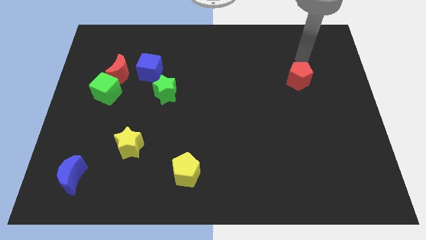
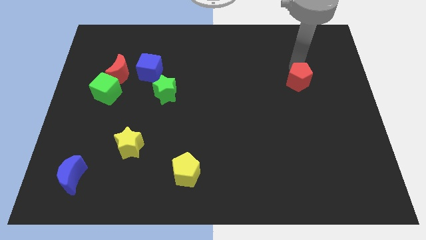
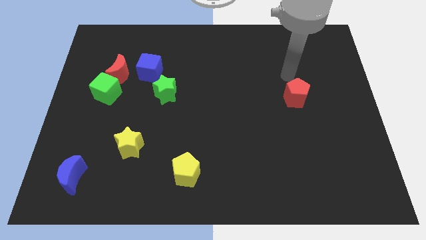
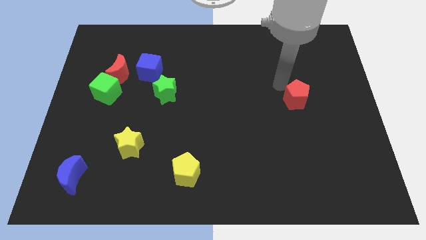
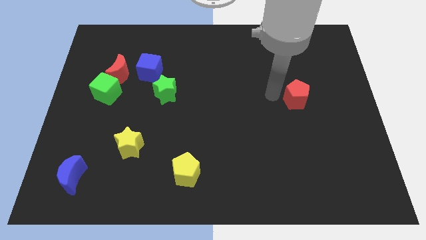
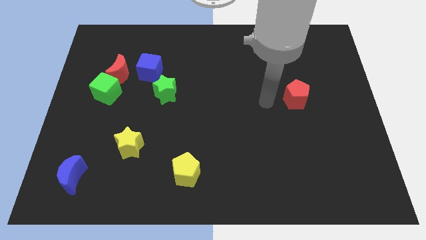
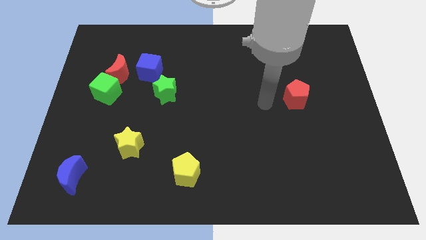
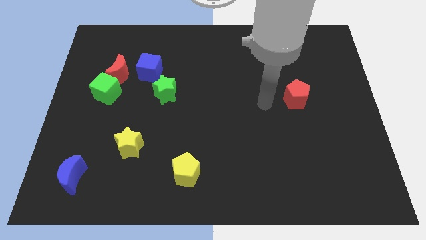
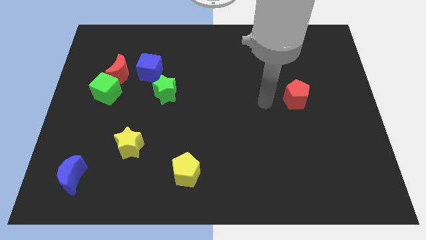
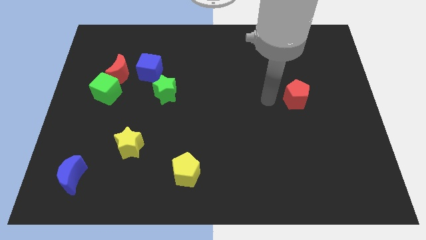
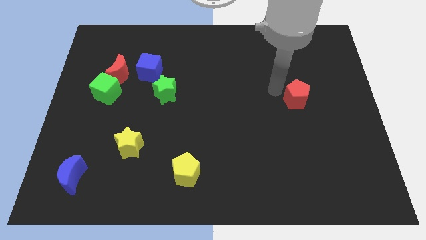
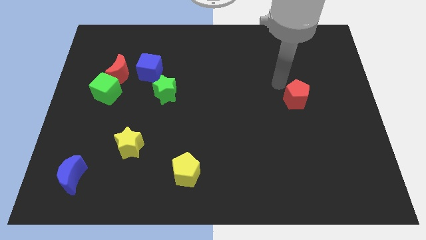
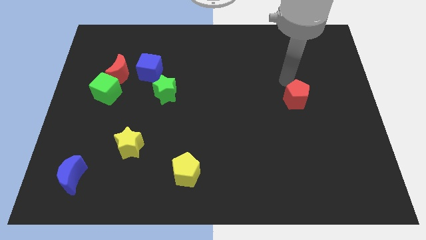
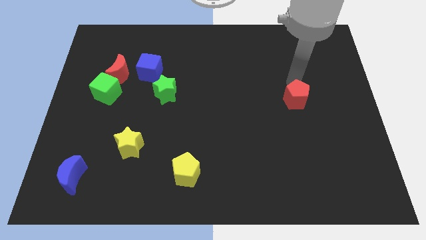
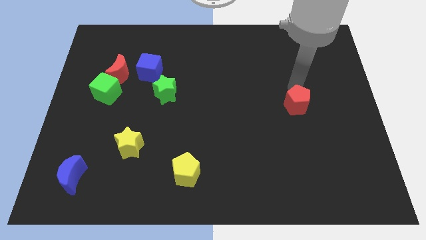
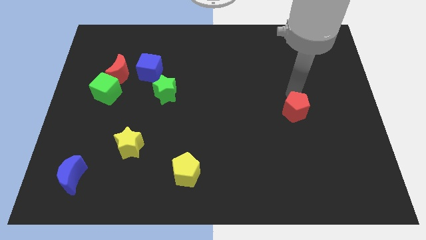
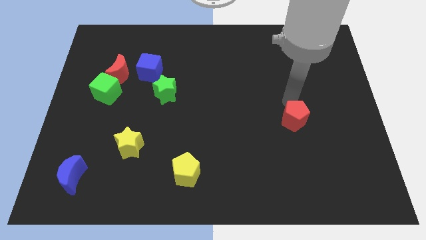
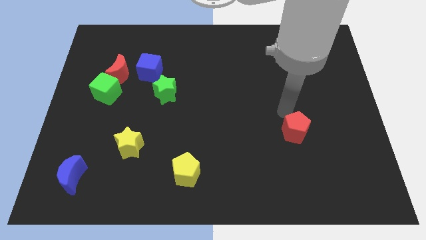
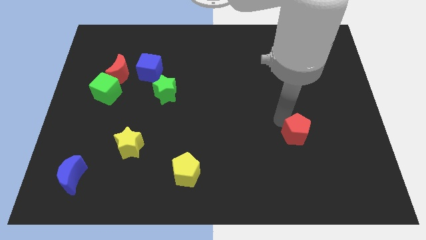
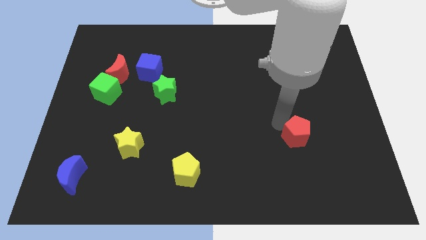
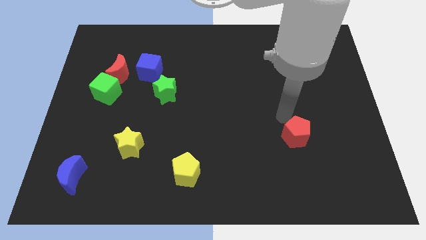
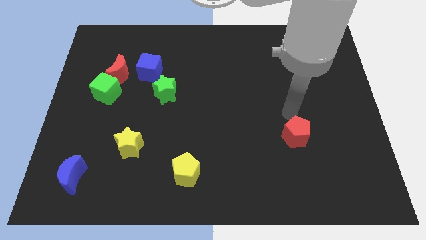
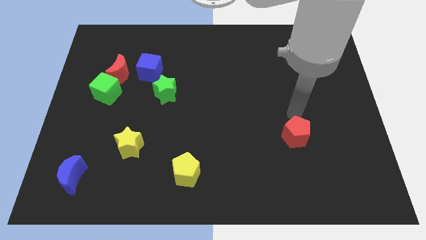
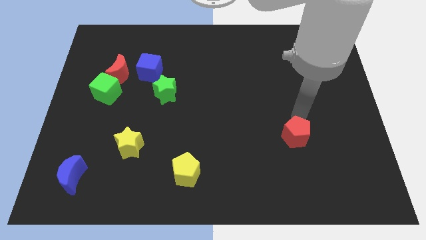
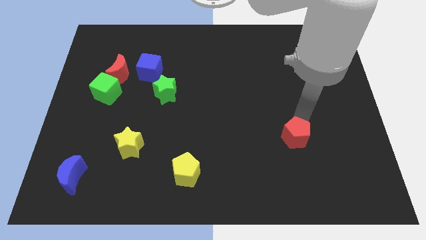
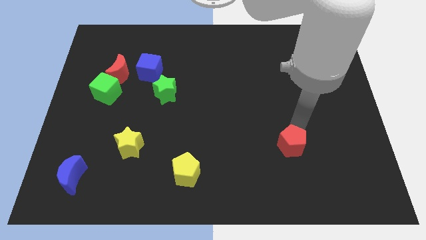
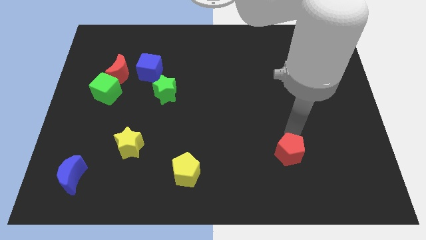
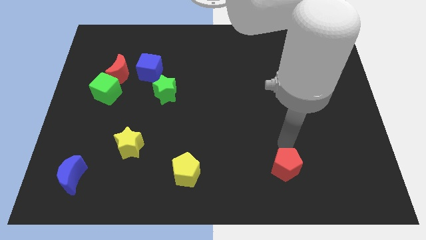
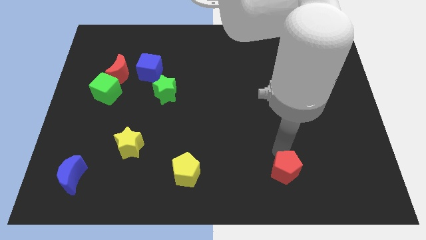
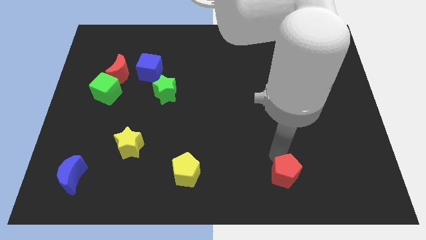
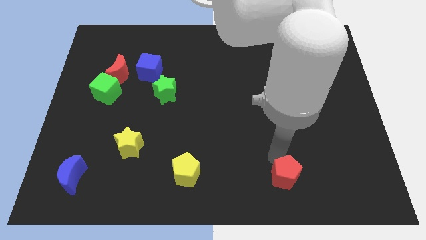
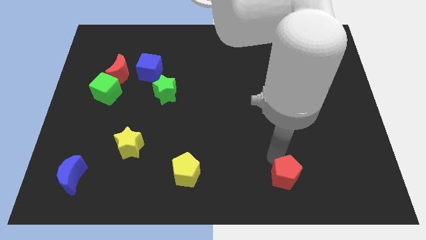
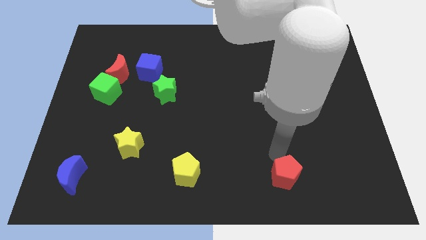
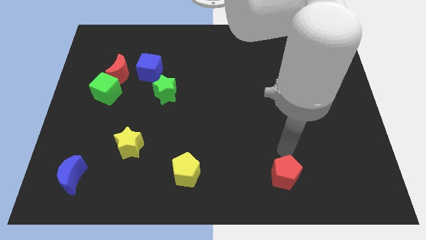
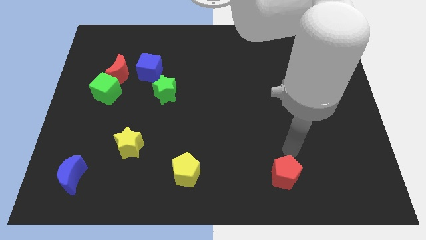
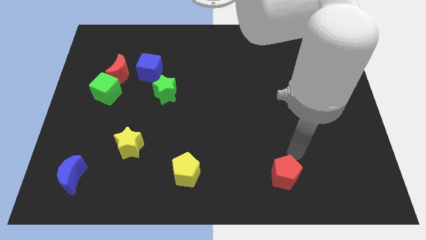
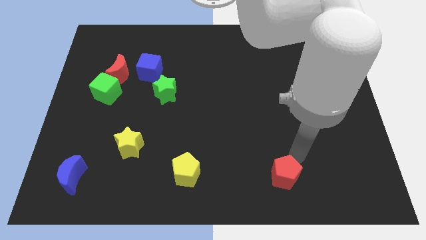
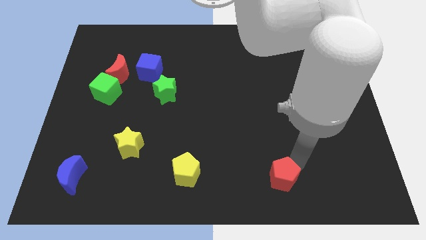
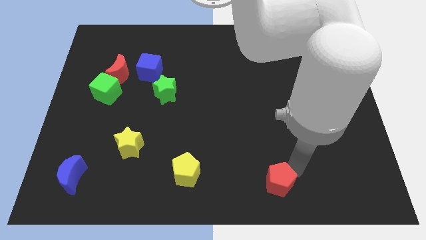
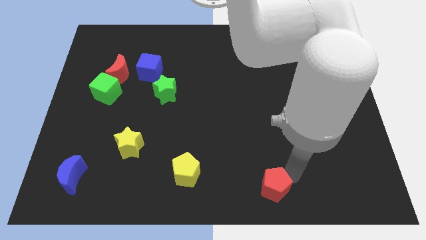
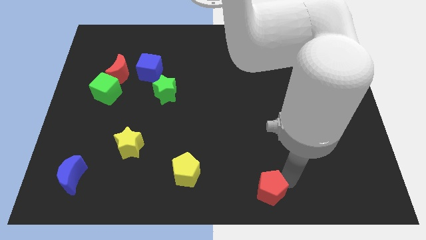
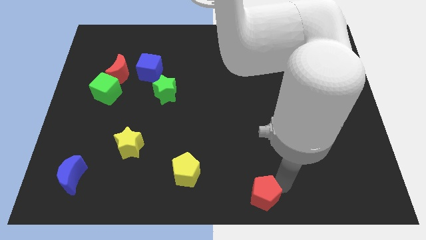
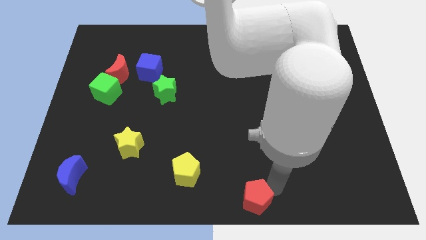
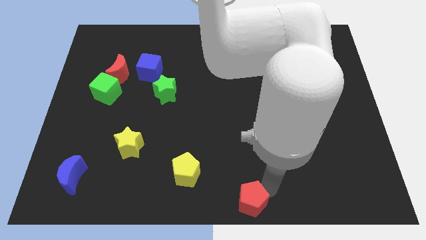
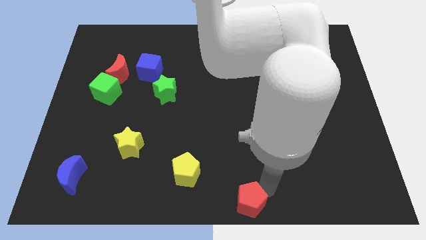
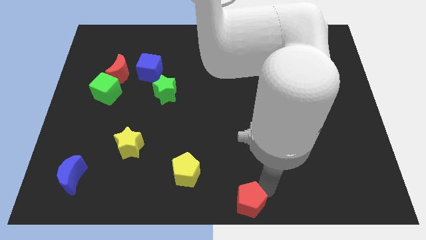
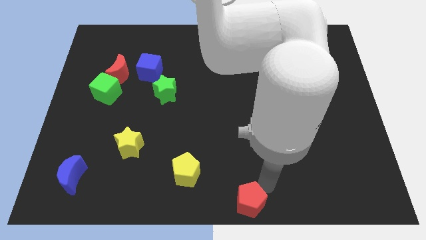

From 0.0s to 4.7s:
push the red pentagon towards the bottom center of the board

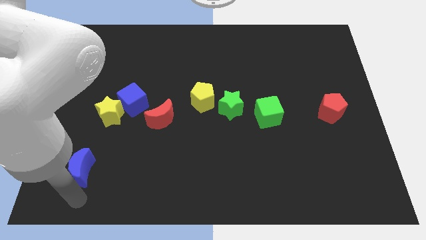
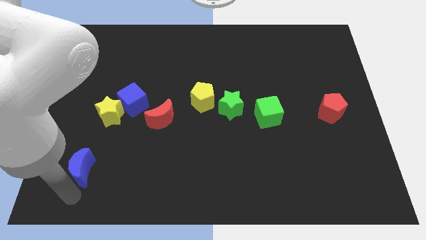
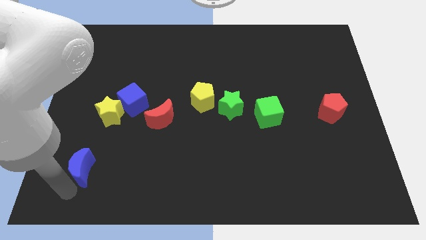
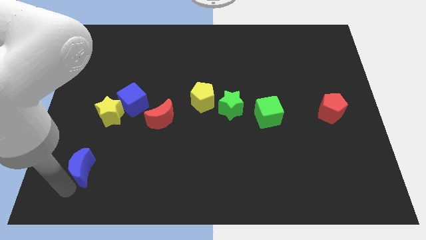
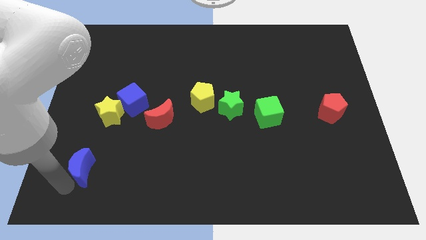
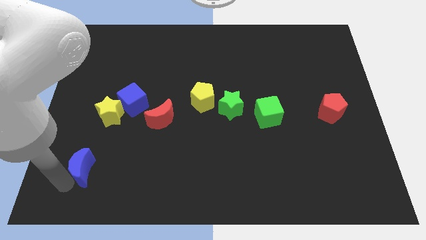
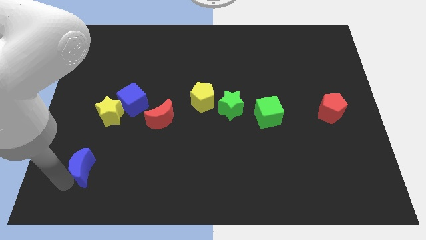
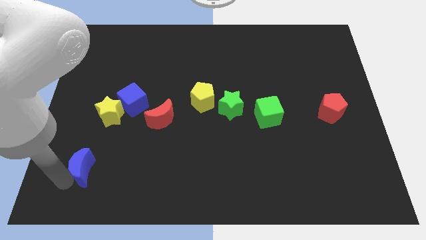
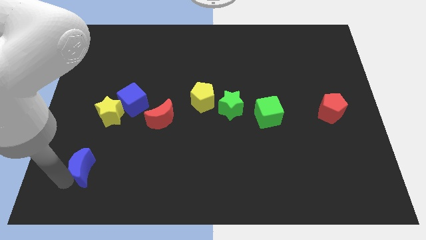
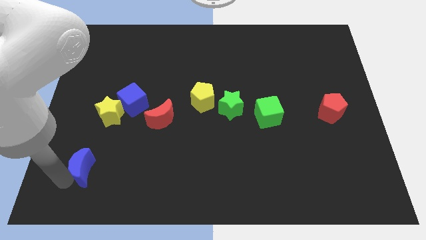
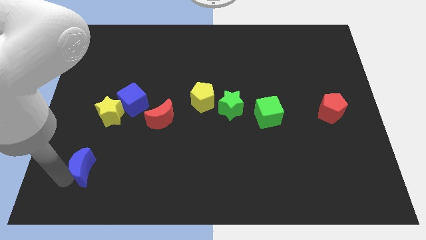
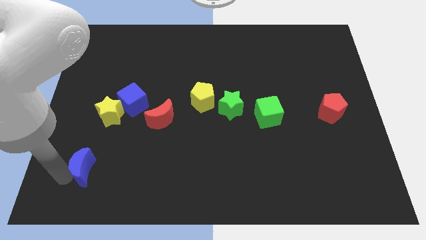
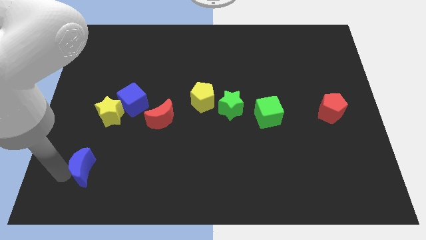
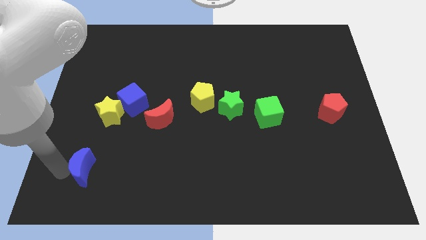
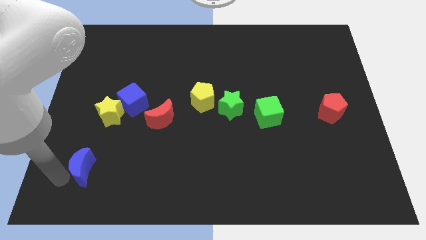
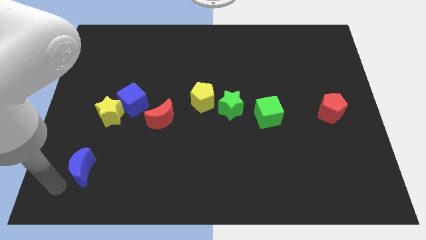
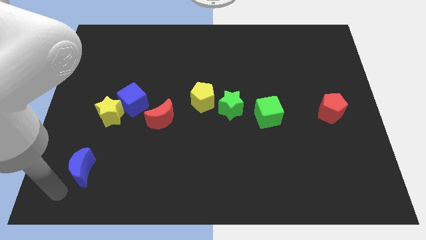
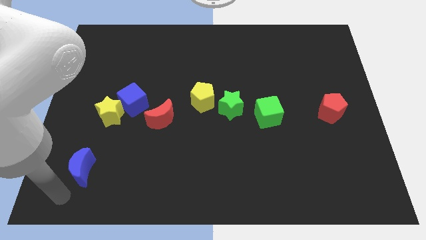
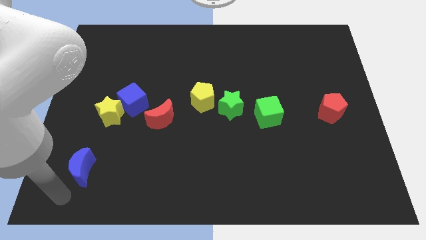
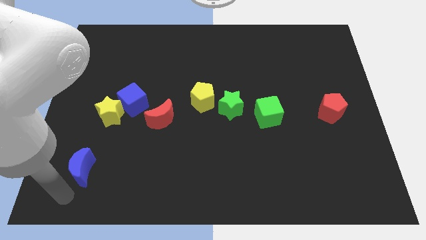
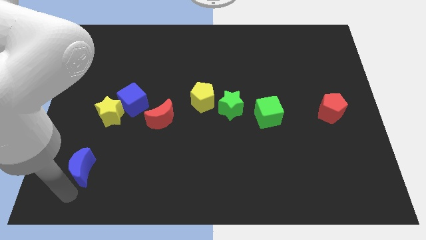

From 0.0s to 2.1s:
point the arm to the bottom left side of the blue moon

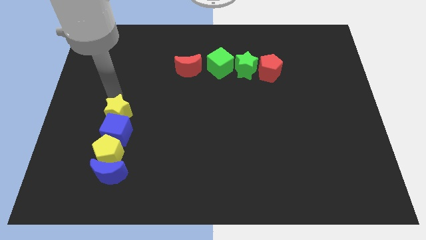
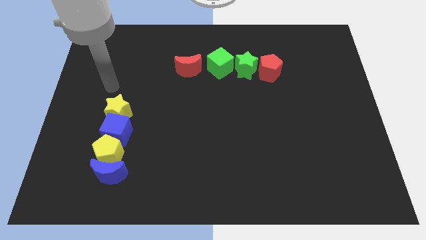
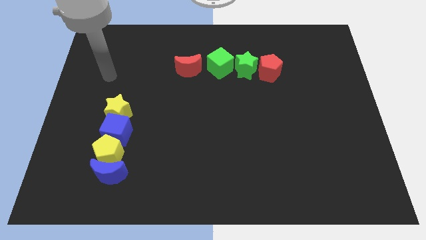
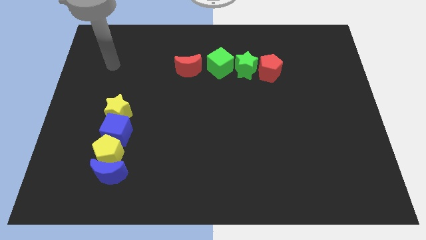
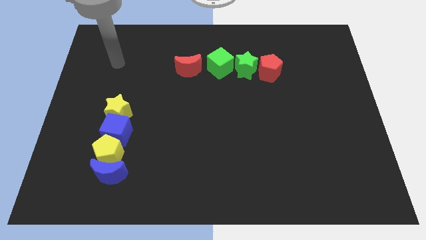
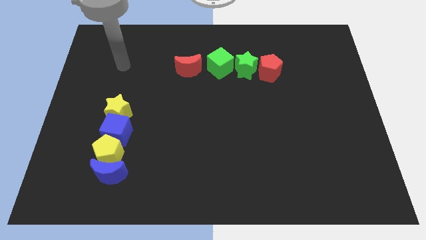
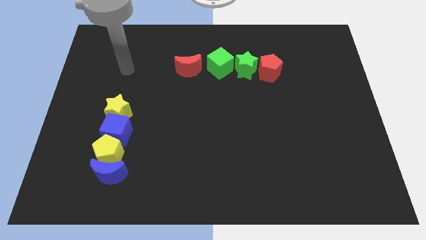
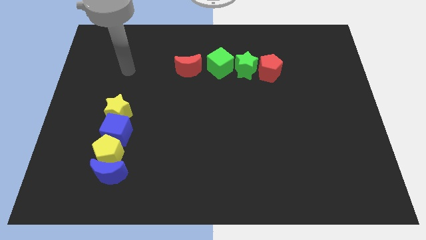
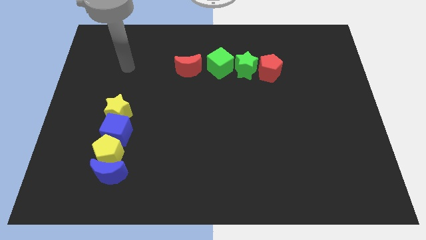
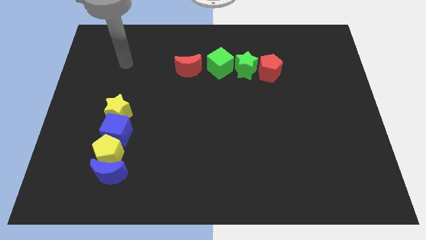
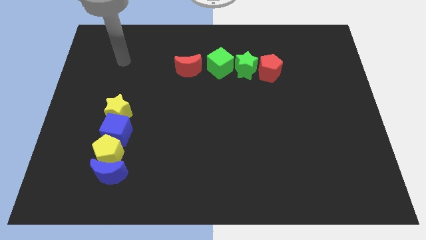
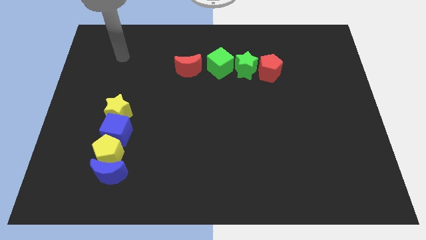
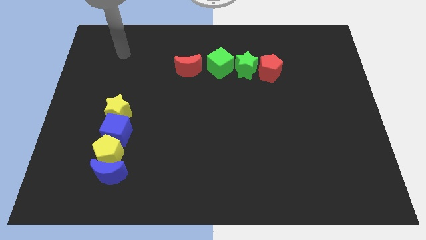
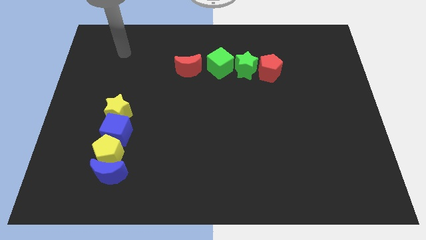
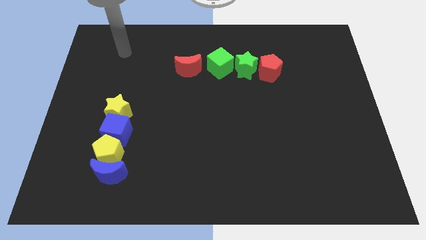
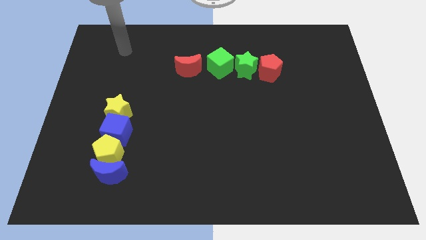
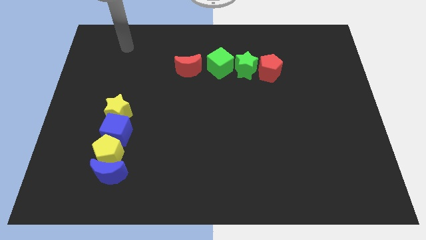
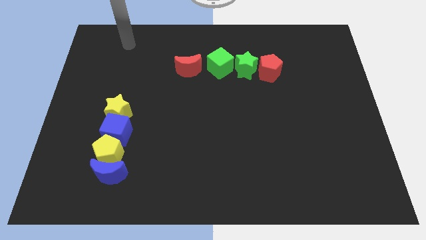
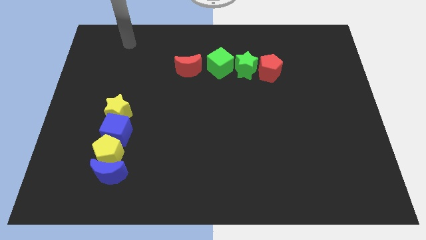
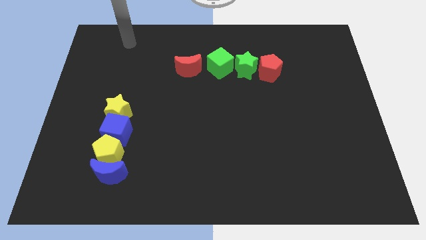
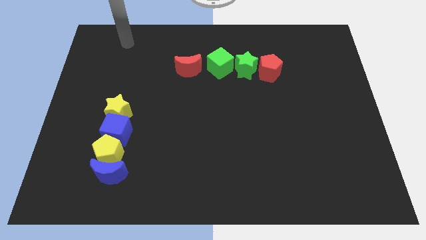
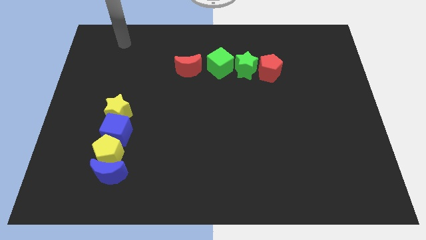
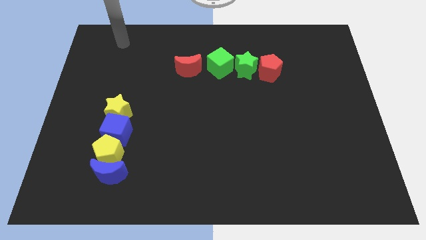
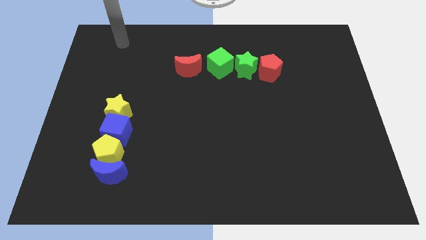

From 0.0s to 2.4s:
move your hand away from the yellow star
